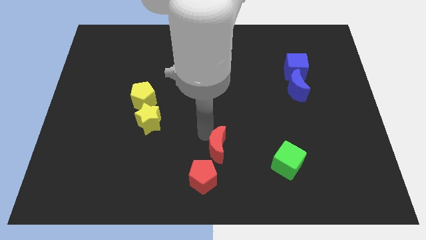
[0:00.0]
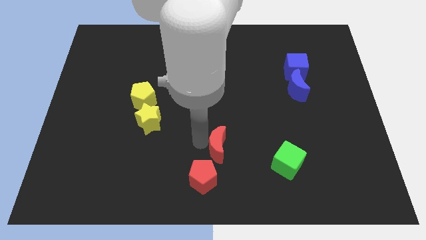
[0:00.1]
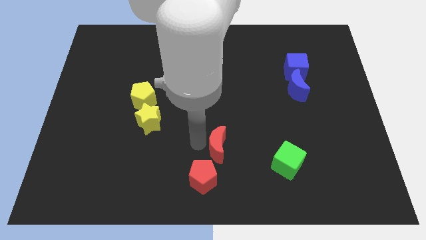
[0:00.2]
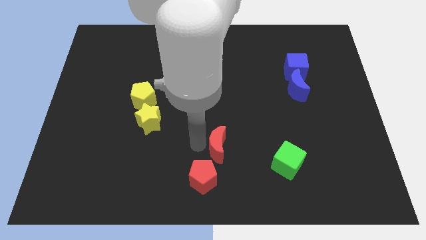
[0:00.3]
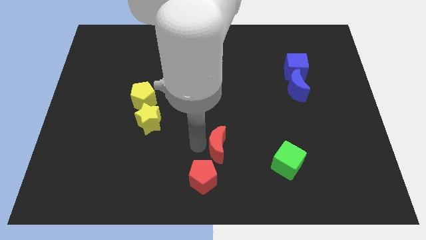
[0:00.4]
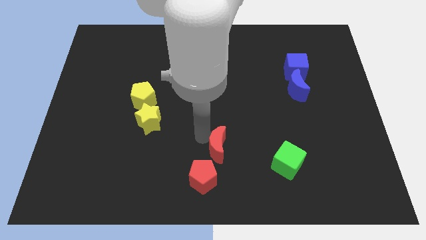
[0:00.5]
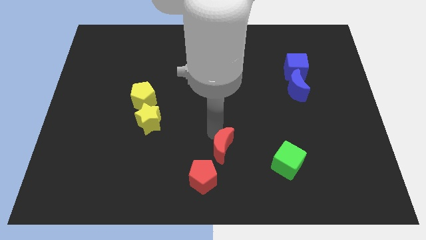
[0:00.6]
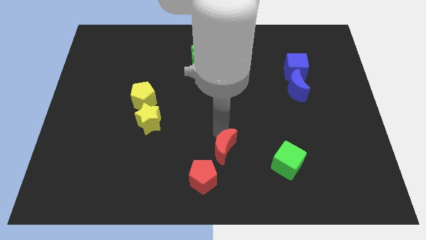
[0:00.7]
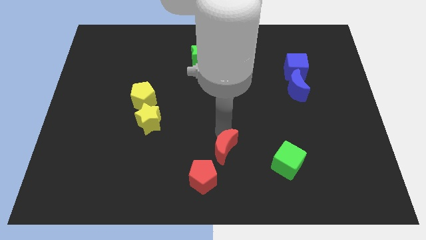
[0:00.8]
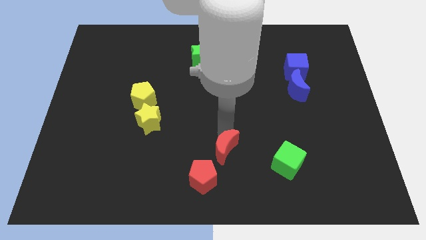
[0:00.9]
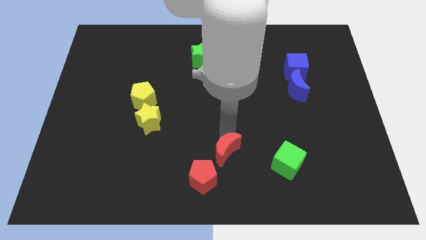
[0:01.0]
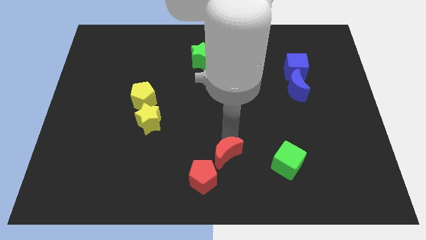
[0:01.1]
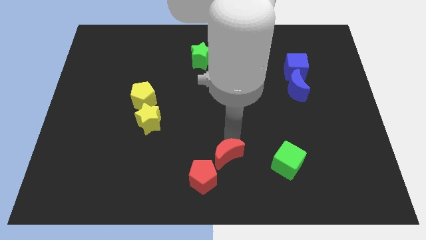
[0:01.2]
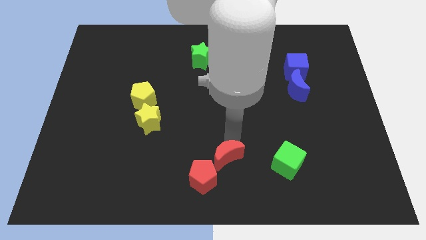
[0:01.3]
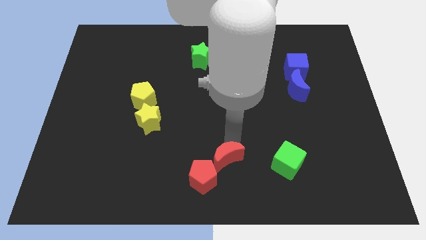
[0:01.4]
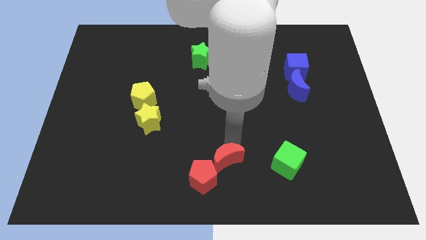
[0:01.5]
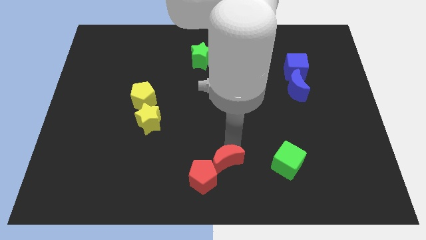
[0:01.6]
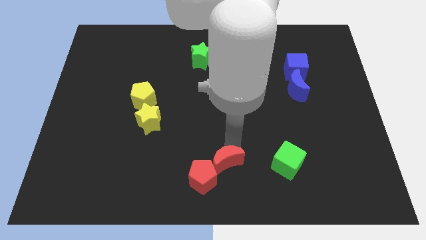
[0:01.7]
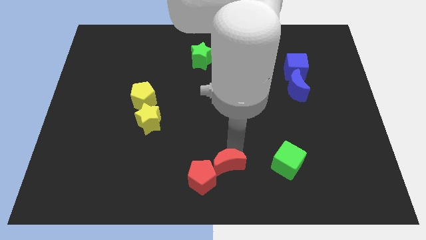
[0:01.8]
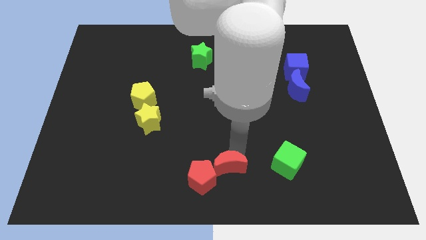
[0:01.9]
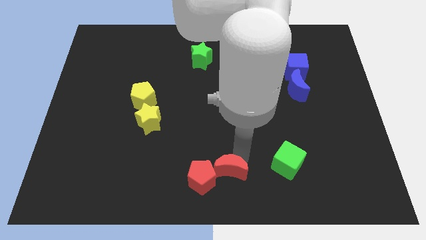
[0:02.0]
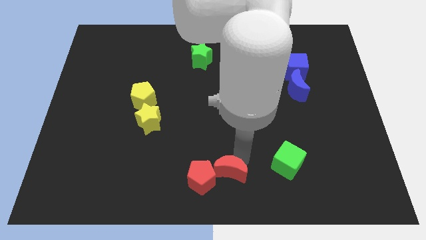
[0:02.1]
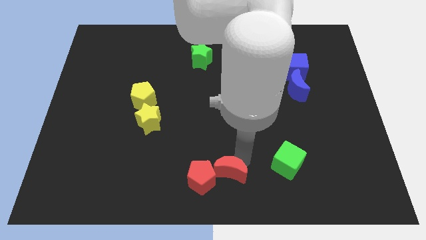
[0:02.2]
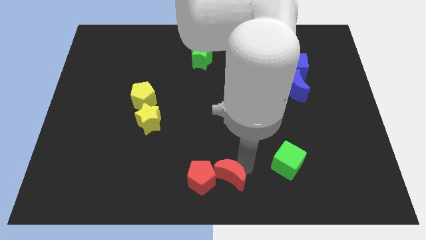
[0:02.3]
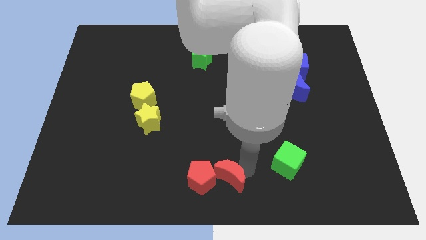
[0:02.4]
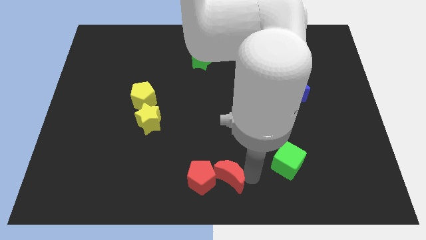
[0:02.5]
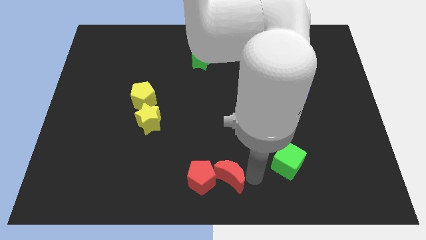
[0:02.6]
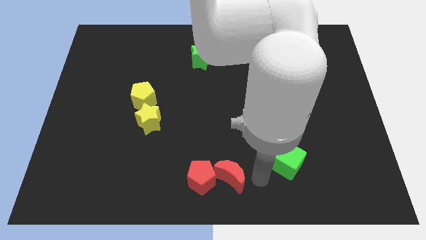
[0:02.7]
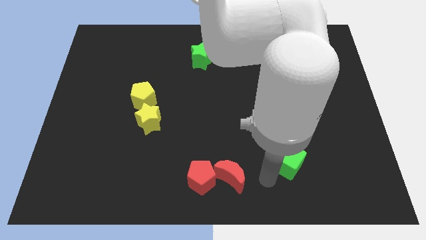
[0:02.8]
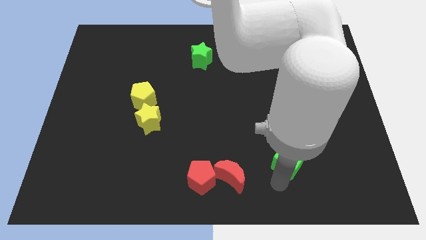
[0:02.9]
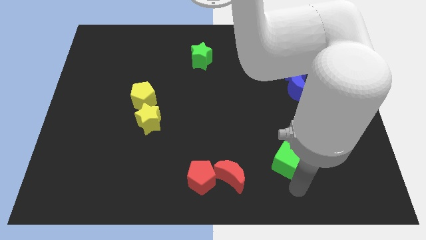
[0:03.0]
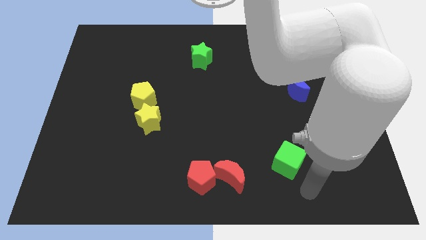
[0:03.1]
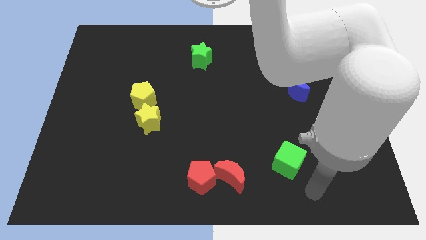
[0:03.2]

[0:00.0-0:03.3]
move the red moon to the right of red pentagon

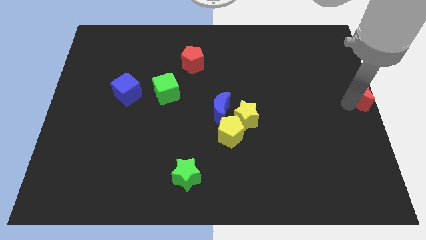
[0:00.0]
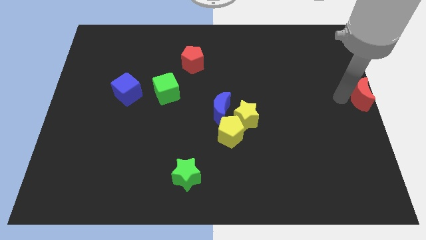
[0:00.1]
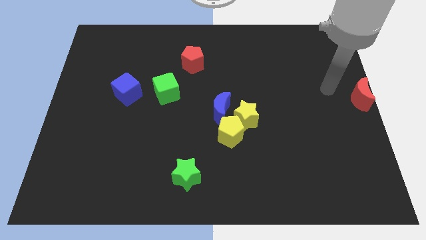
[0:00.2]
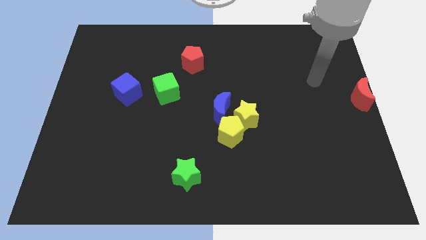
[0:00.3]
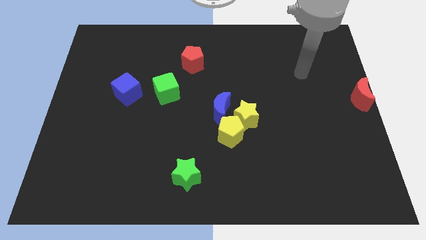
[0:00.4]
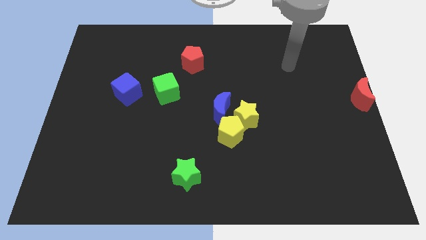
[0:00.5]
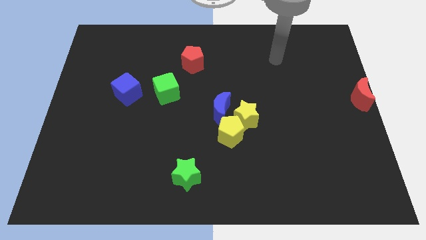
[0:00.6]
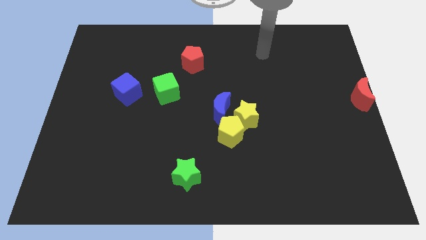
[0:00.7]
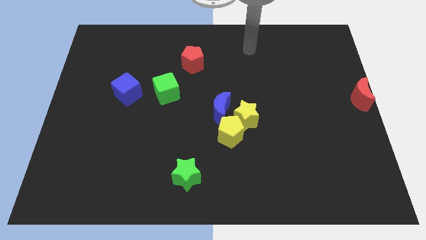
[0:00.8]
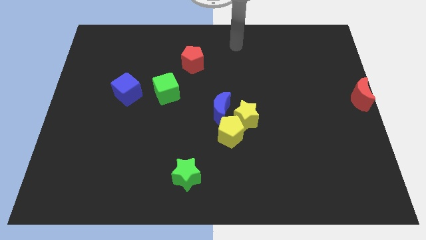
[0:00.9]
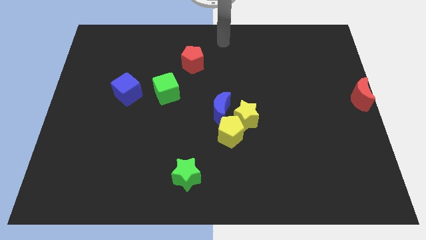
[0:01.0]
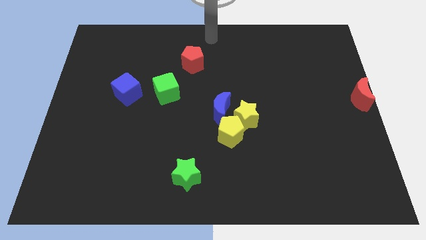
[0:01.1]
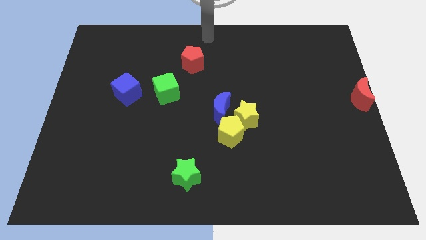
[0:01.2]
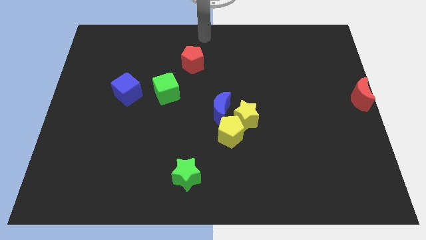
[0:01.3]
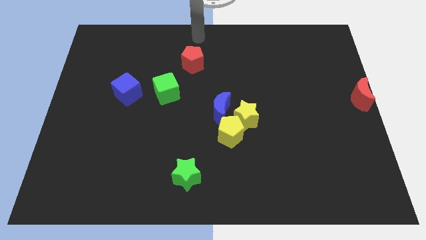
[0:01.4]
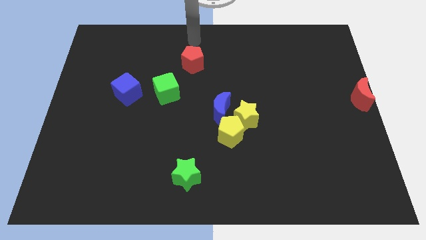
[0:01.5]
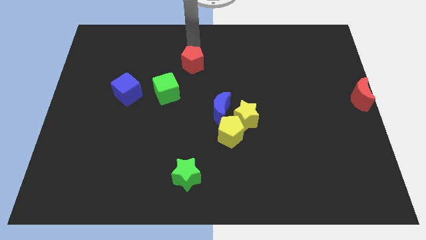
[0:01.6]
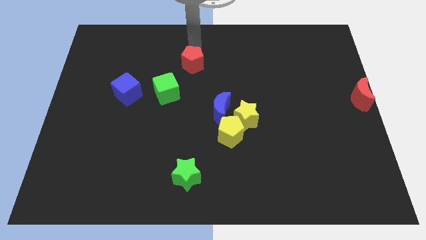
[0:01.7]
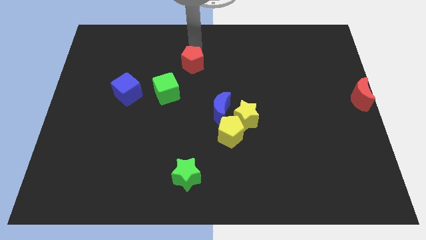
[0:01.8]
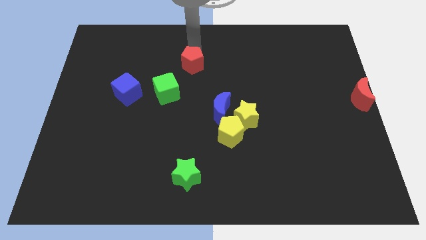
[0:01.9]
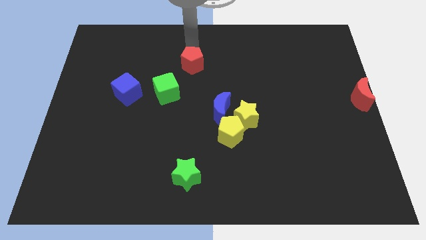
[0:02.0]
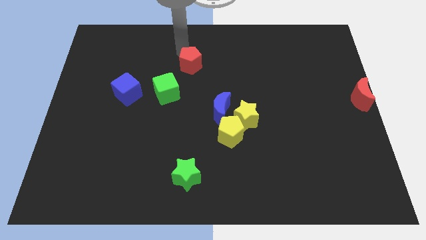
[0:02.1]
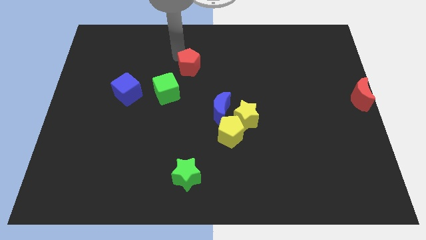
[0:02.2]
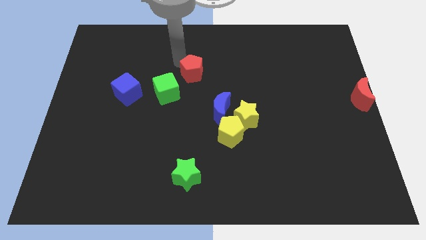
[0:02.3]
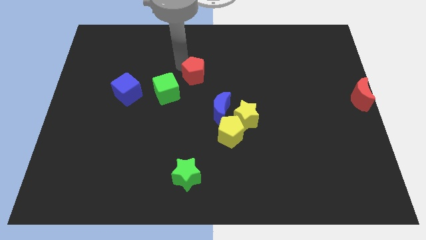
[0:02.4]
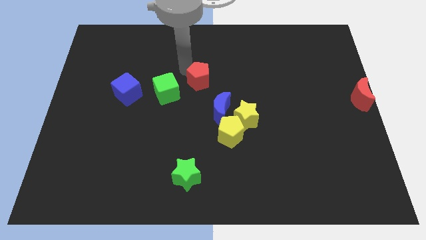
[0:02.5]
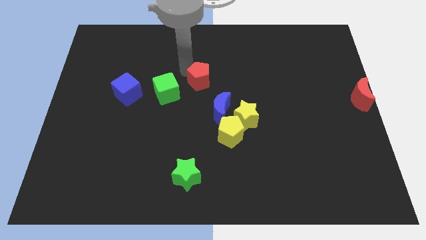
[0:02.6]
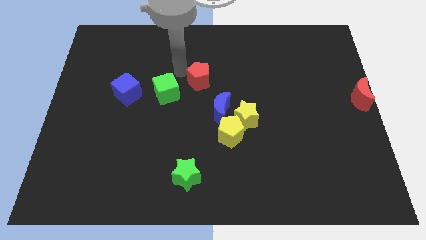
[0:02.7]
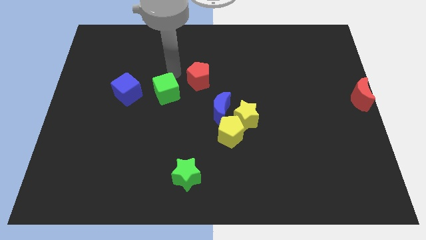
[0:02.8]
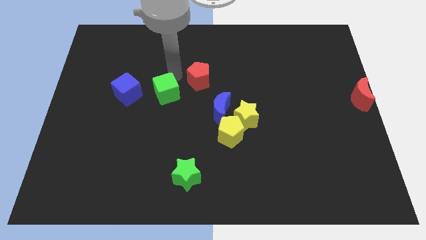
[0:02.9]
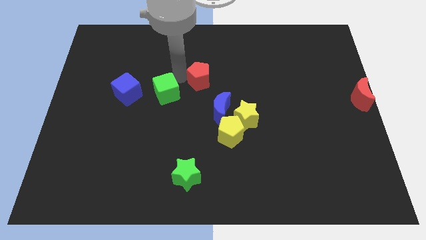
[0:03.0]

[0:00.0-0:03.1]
slide the red pentagon diagonally to the green cube

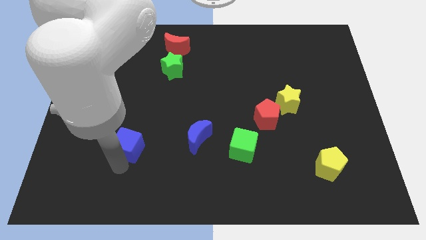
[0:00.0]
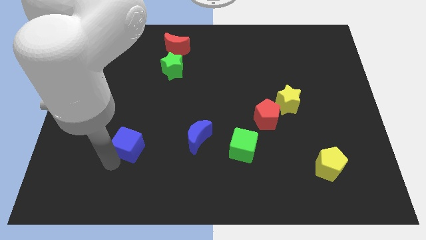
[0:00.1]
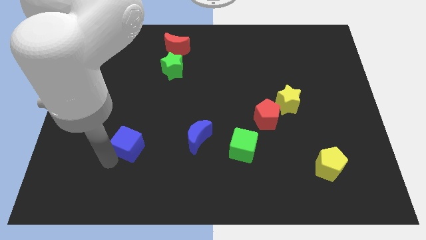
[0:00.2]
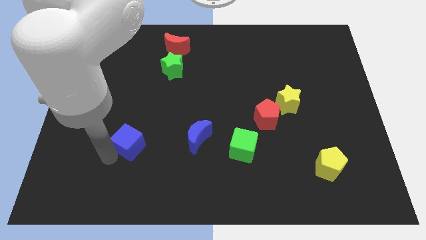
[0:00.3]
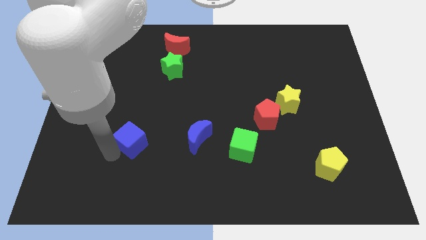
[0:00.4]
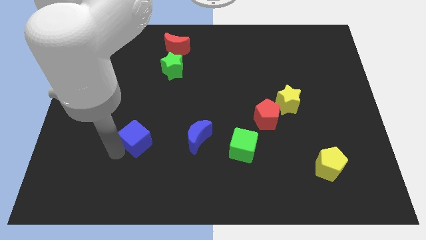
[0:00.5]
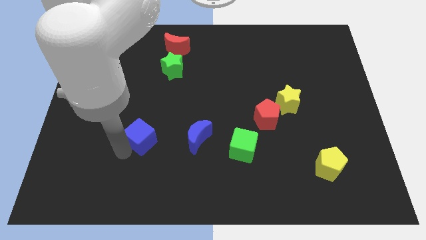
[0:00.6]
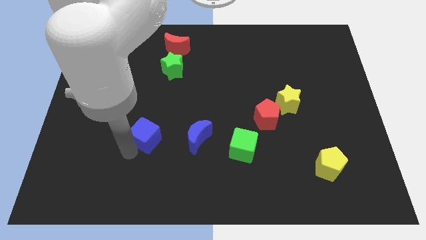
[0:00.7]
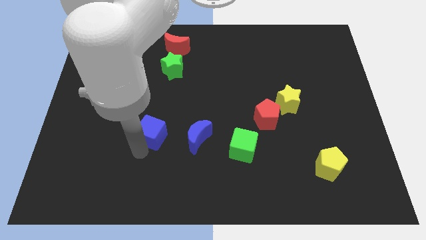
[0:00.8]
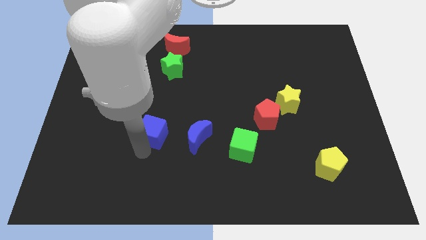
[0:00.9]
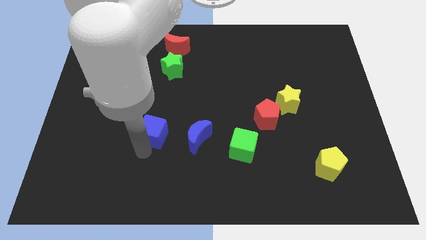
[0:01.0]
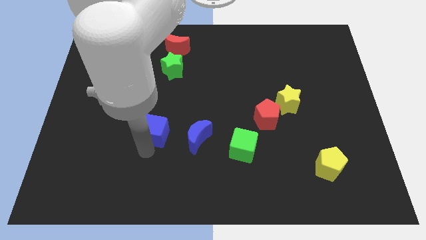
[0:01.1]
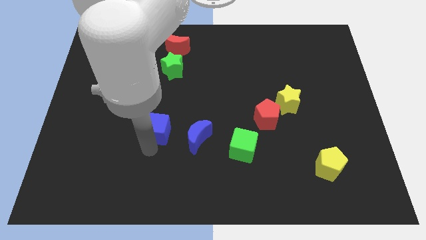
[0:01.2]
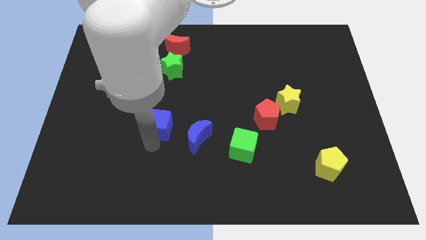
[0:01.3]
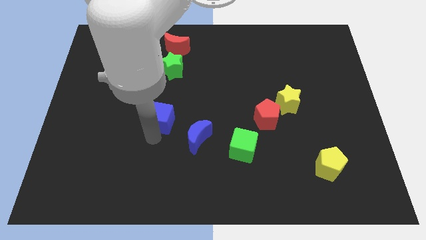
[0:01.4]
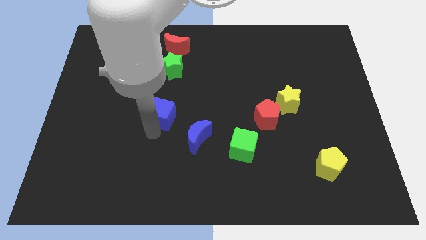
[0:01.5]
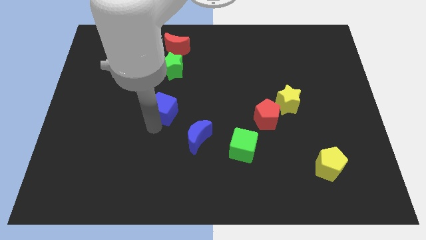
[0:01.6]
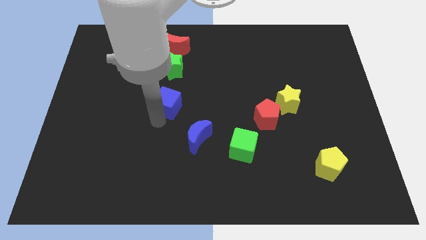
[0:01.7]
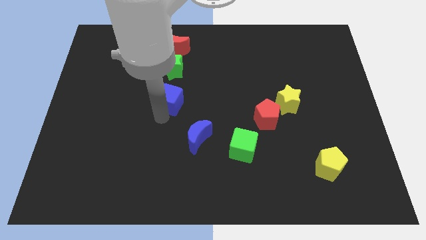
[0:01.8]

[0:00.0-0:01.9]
move blue cube towards green star

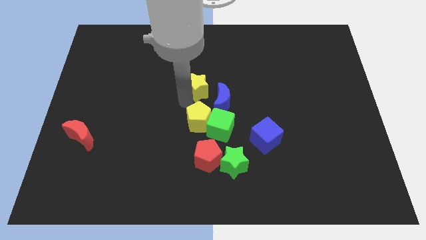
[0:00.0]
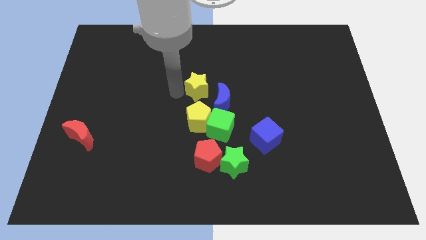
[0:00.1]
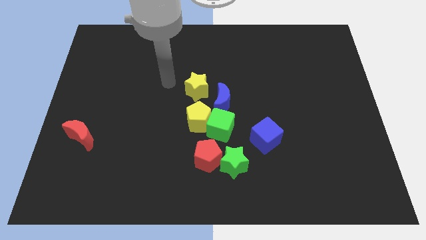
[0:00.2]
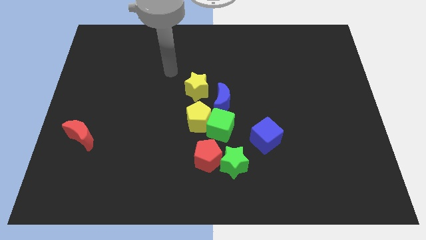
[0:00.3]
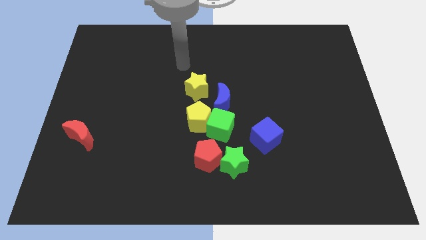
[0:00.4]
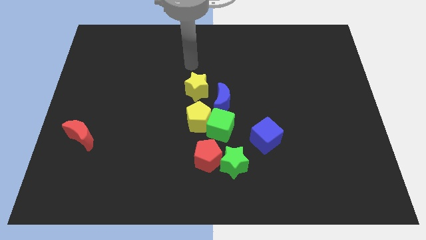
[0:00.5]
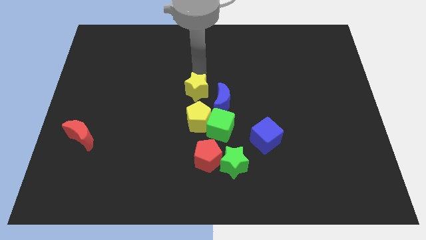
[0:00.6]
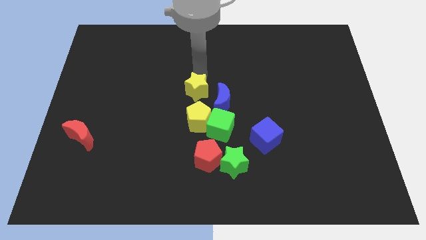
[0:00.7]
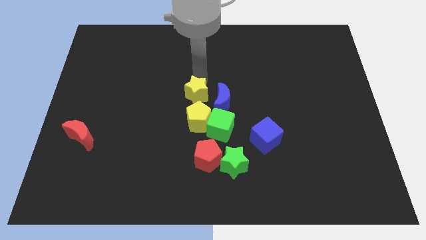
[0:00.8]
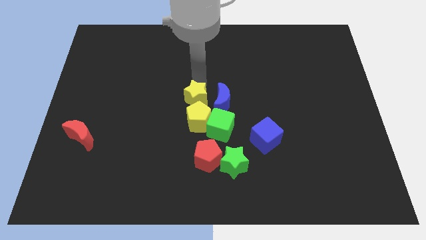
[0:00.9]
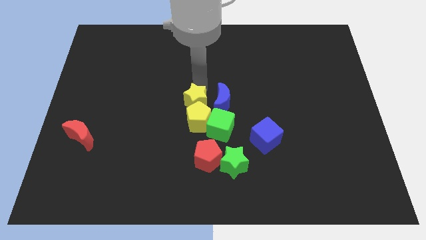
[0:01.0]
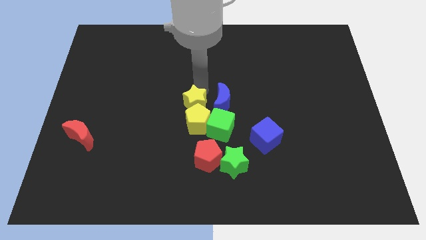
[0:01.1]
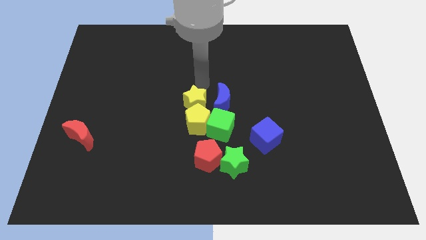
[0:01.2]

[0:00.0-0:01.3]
push the yellow star into the yellow pentagon
